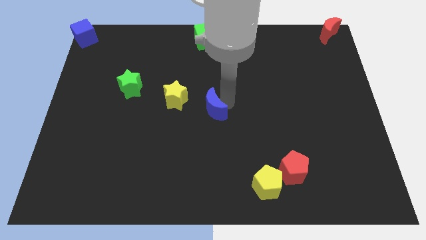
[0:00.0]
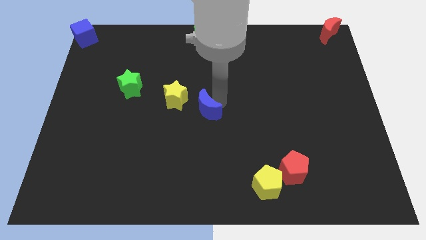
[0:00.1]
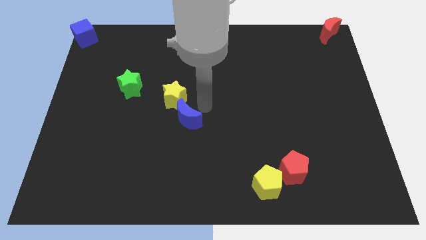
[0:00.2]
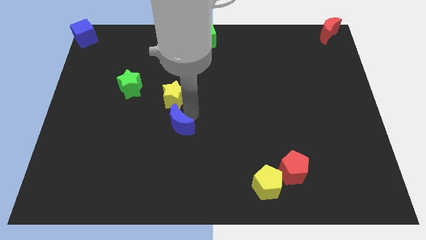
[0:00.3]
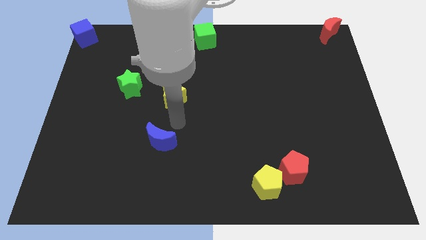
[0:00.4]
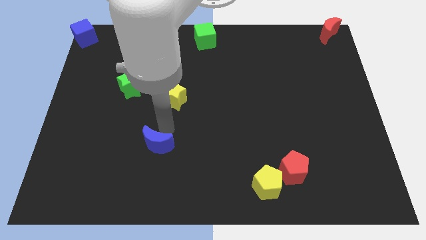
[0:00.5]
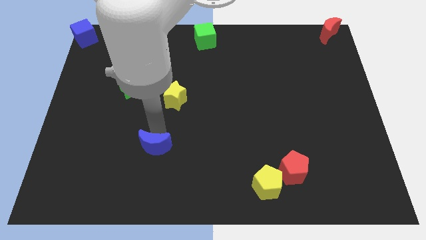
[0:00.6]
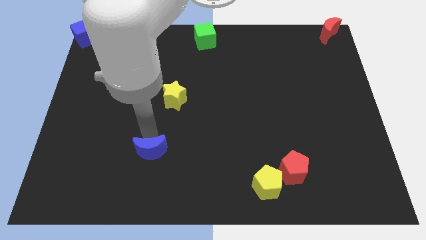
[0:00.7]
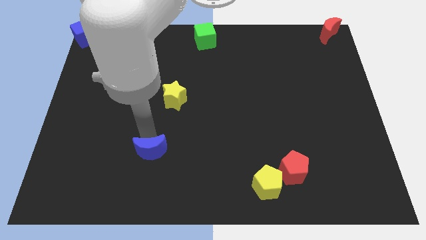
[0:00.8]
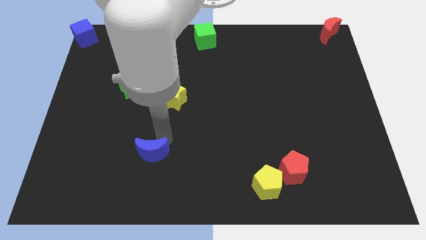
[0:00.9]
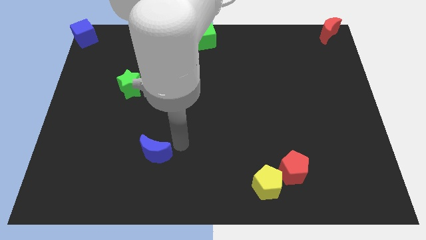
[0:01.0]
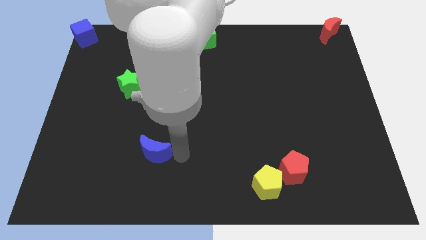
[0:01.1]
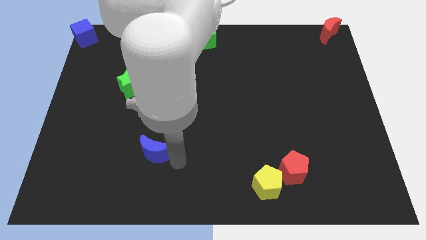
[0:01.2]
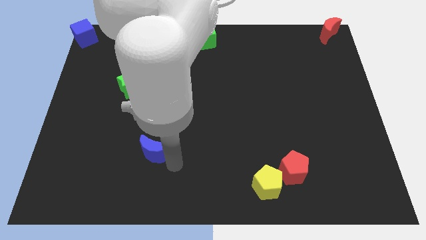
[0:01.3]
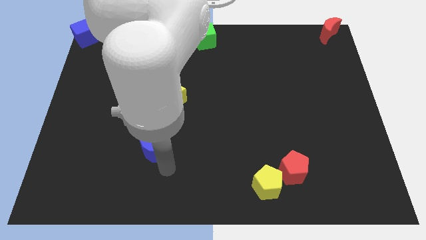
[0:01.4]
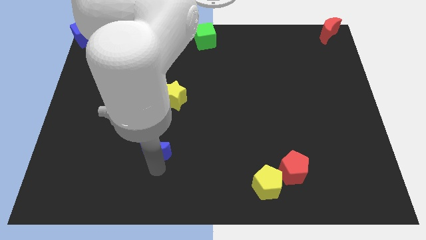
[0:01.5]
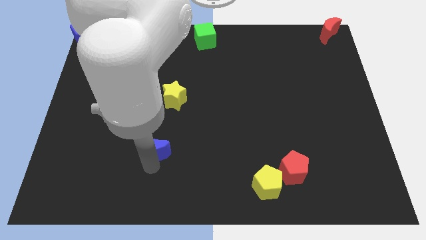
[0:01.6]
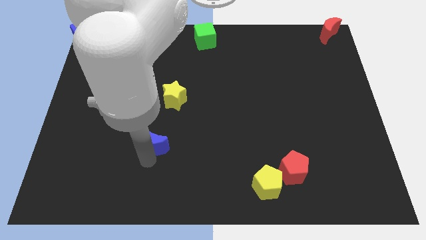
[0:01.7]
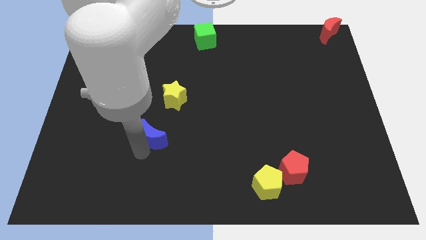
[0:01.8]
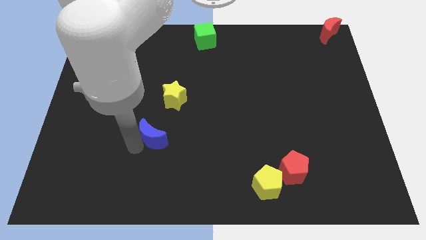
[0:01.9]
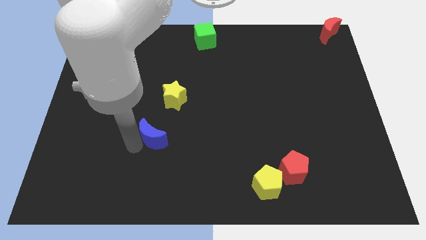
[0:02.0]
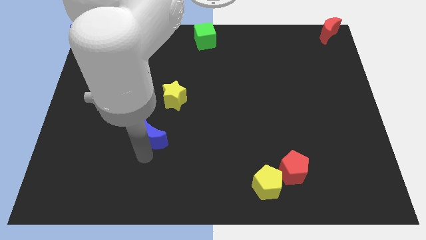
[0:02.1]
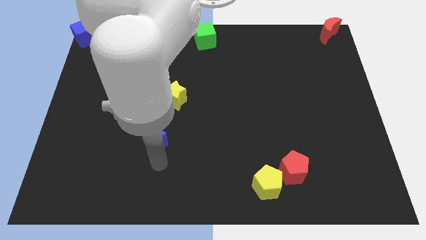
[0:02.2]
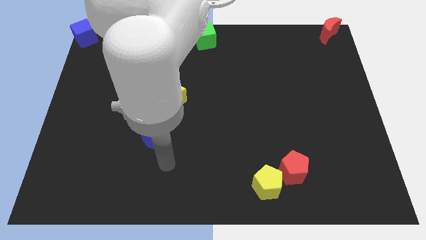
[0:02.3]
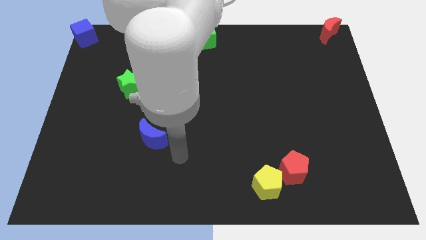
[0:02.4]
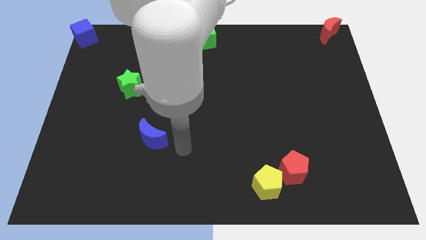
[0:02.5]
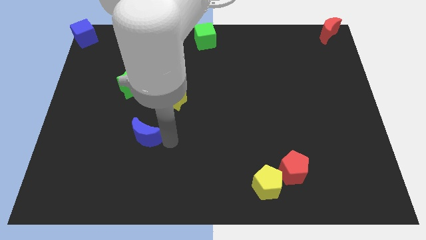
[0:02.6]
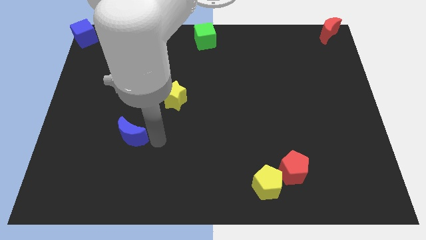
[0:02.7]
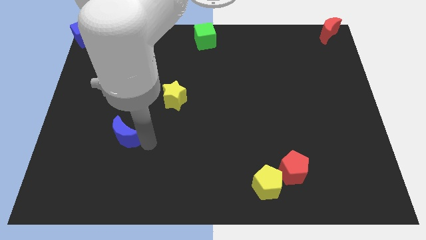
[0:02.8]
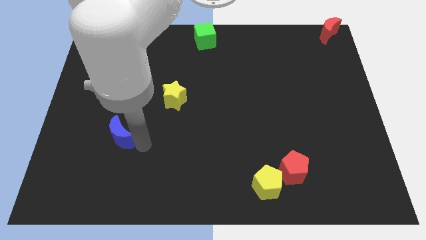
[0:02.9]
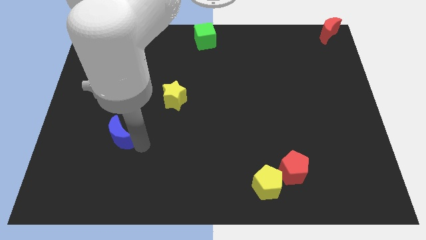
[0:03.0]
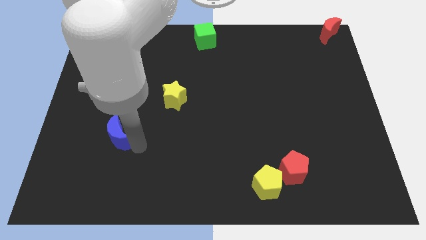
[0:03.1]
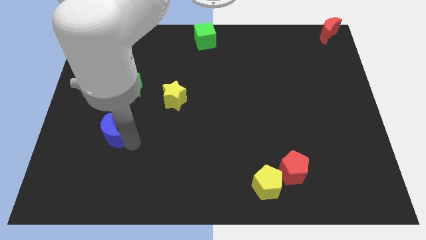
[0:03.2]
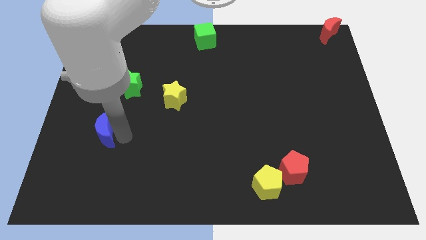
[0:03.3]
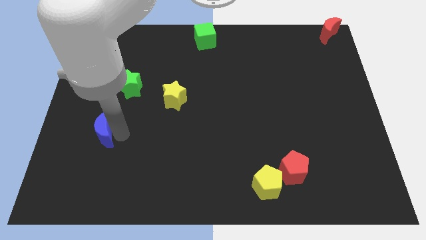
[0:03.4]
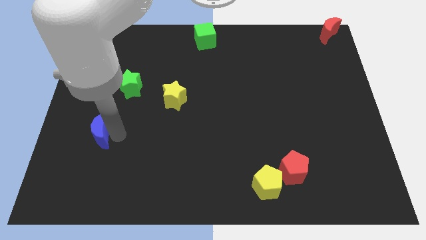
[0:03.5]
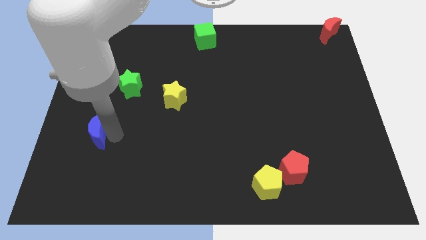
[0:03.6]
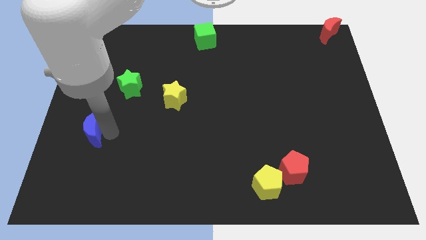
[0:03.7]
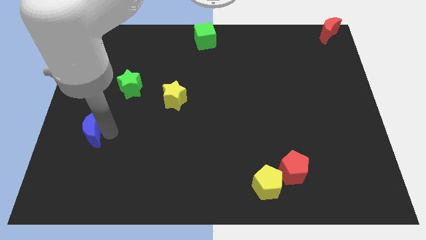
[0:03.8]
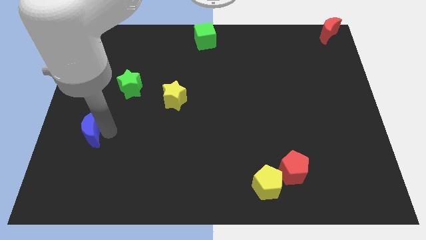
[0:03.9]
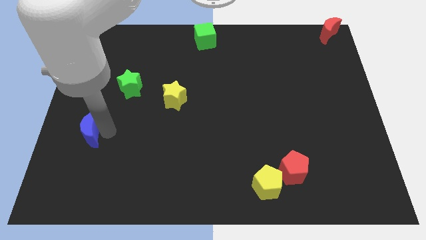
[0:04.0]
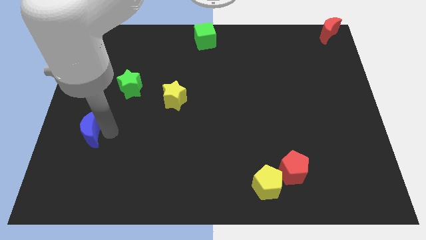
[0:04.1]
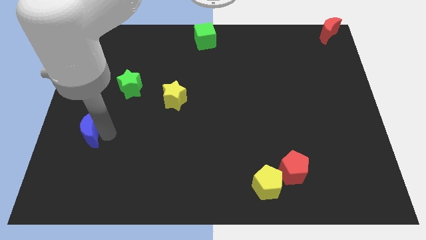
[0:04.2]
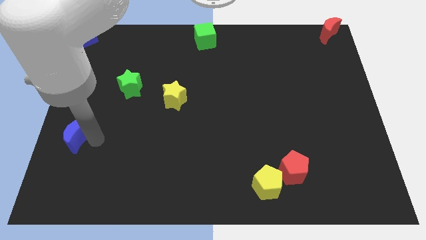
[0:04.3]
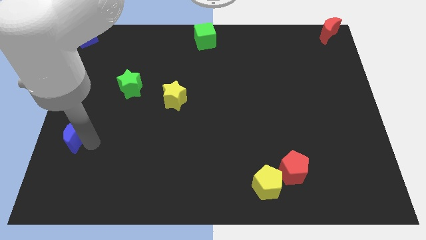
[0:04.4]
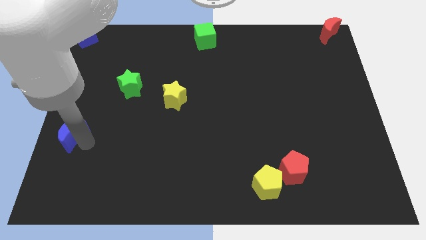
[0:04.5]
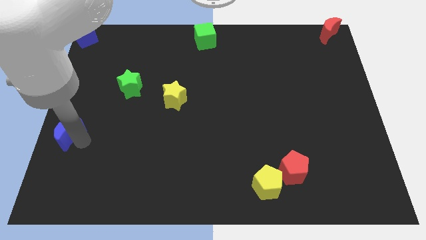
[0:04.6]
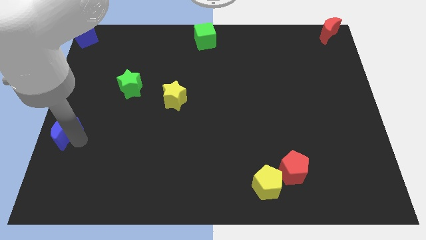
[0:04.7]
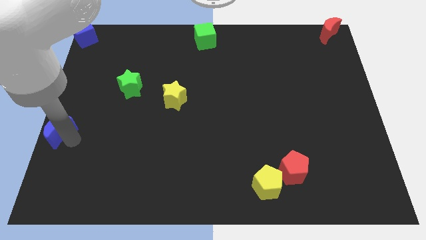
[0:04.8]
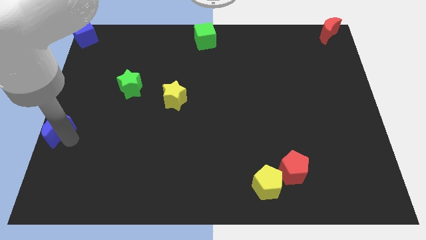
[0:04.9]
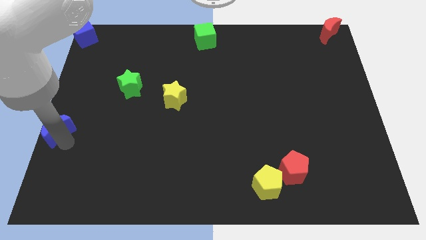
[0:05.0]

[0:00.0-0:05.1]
move the blue moon to the bottom left

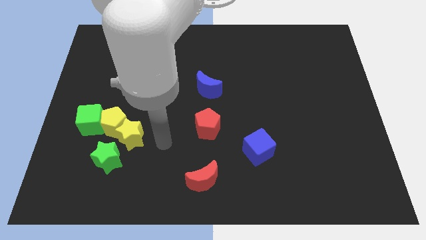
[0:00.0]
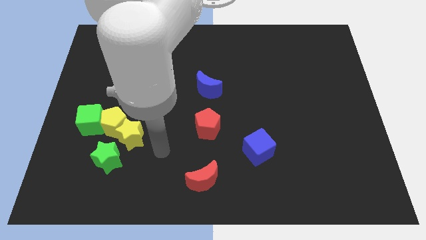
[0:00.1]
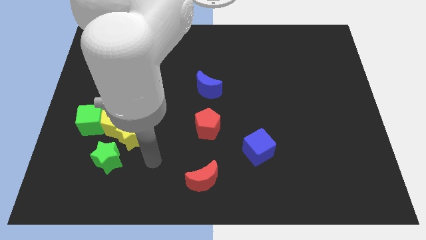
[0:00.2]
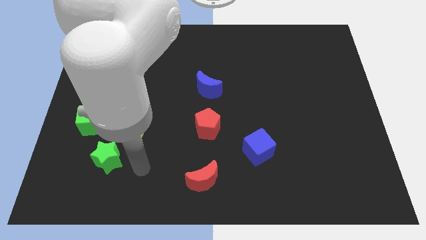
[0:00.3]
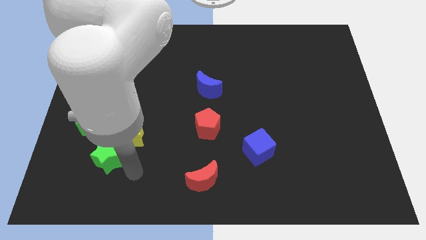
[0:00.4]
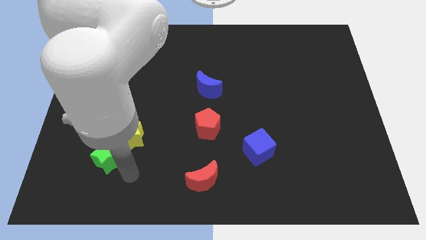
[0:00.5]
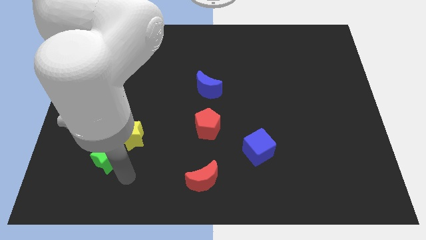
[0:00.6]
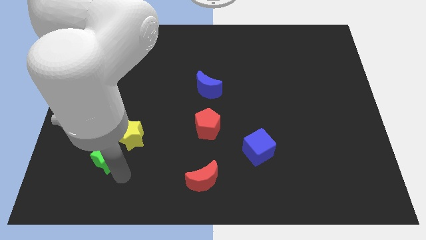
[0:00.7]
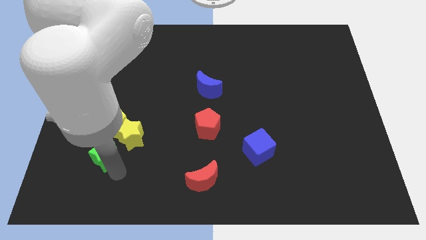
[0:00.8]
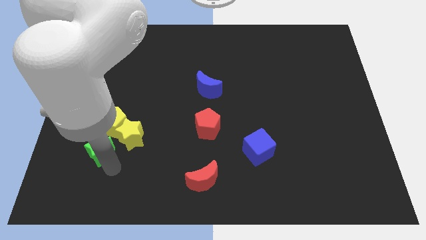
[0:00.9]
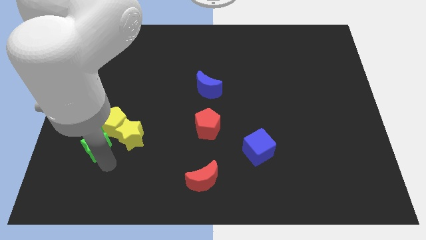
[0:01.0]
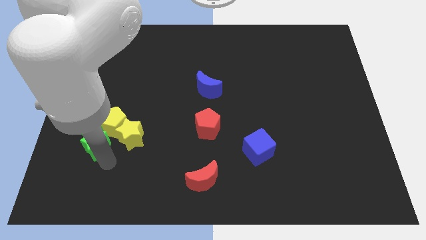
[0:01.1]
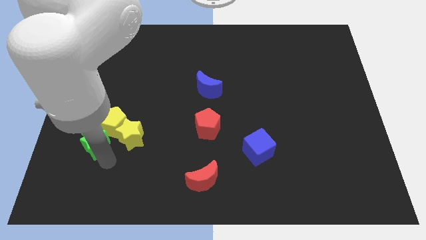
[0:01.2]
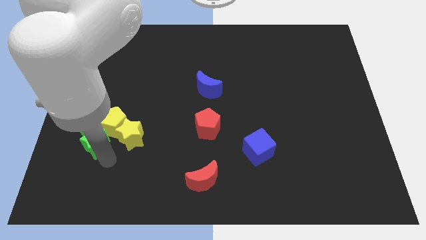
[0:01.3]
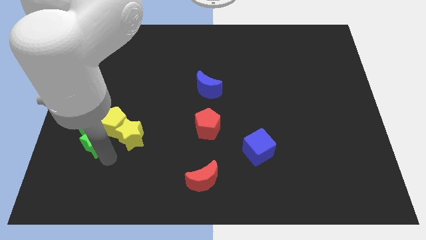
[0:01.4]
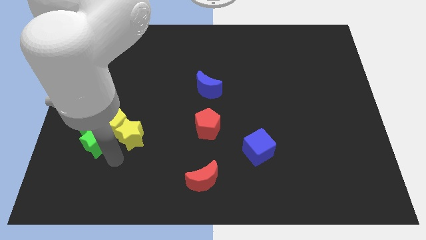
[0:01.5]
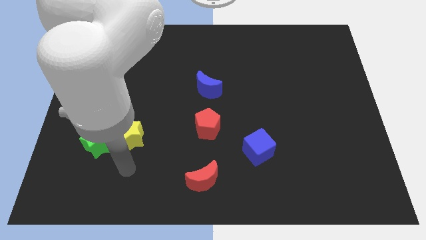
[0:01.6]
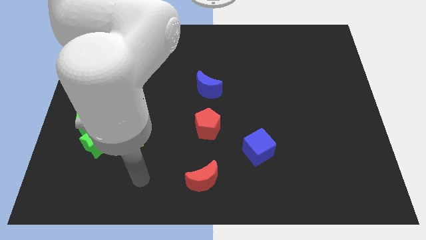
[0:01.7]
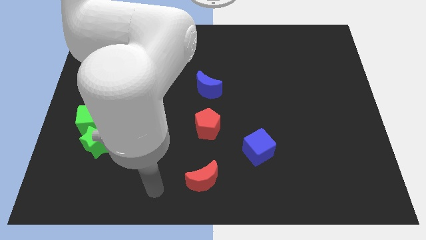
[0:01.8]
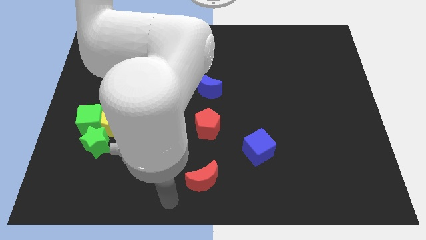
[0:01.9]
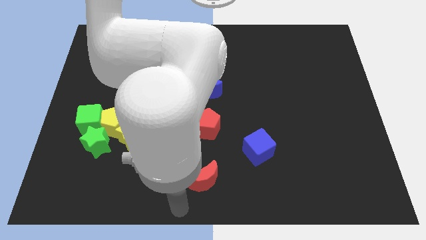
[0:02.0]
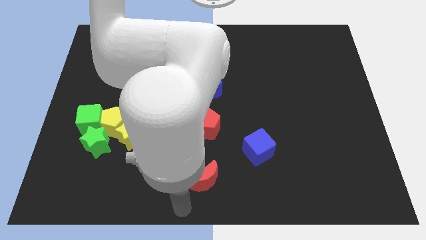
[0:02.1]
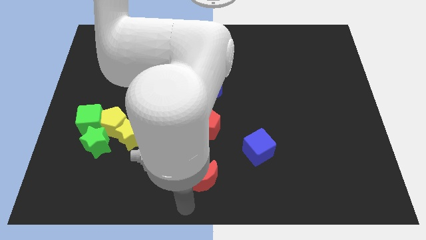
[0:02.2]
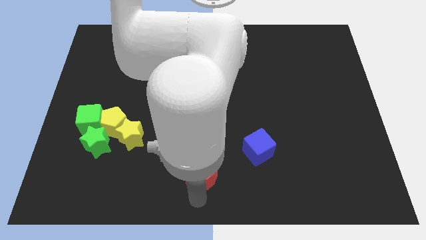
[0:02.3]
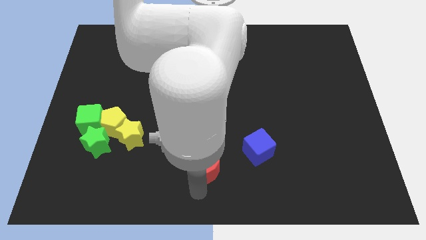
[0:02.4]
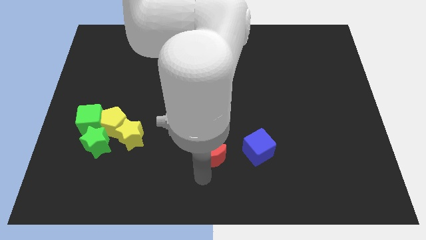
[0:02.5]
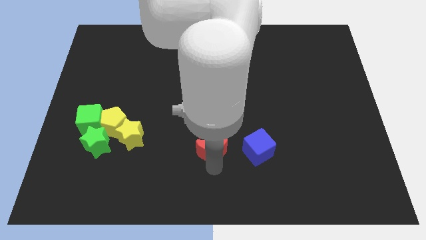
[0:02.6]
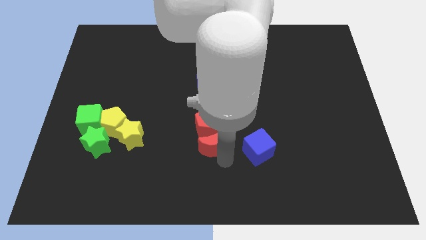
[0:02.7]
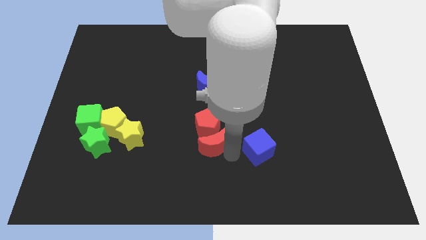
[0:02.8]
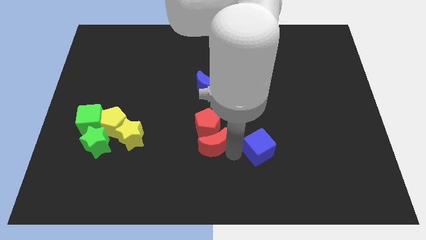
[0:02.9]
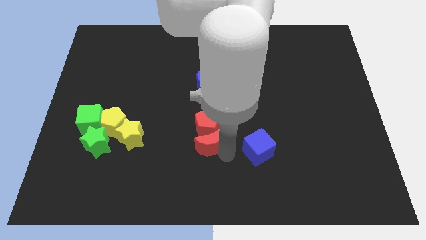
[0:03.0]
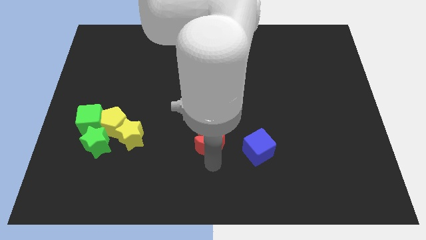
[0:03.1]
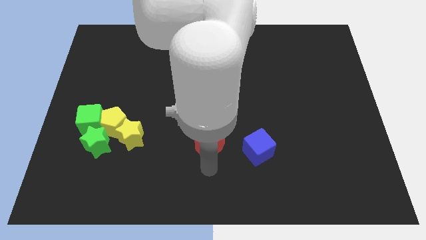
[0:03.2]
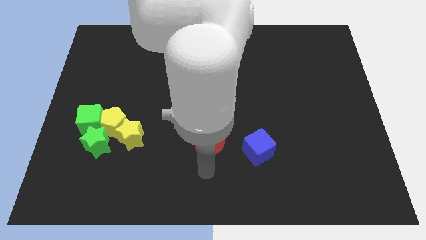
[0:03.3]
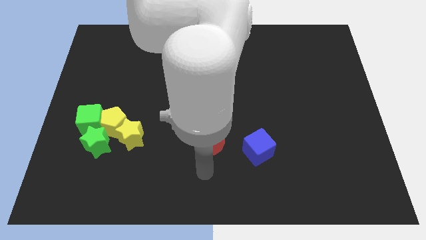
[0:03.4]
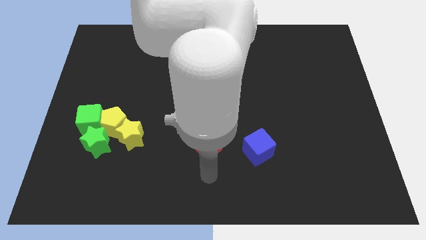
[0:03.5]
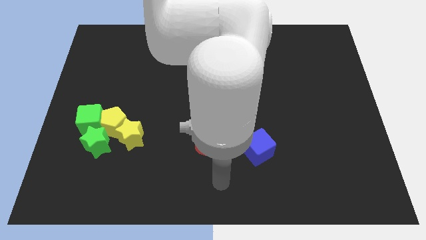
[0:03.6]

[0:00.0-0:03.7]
push the red crescent into the red pentagon from the bottom
